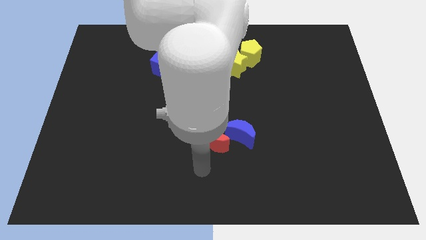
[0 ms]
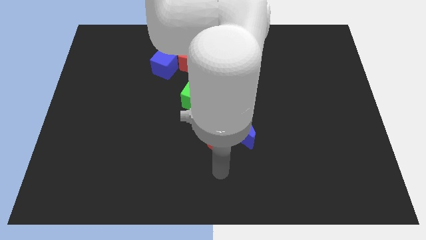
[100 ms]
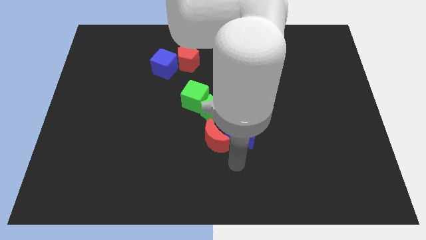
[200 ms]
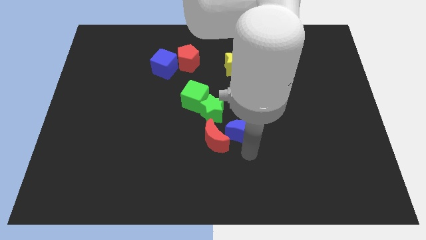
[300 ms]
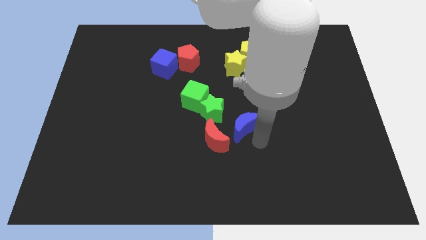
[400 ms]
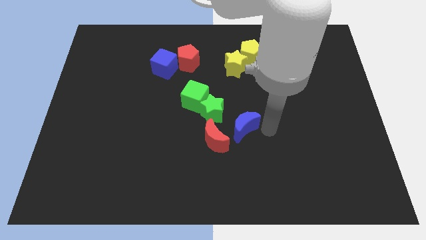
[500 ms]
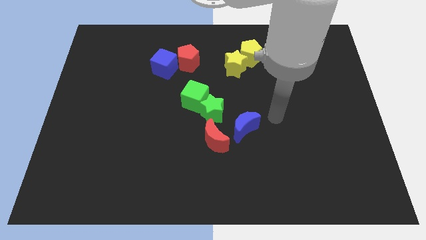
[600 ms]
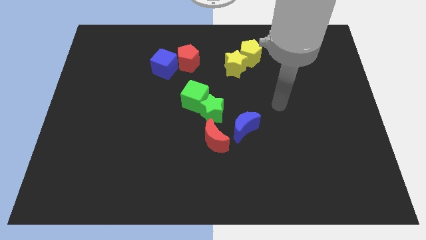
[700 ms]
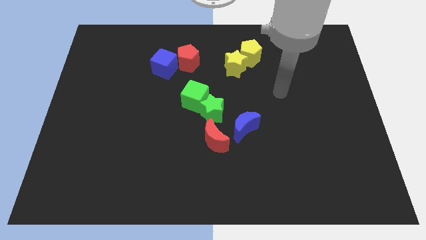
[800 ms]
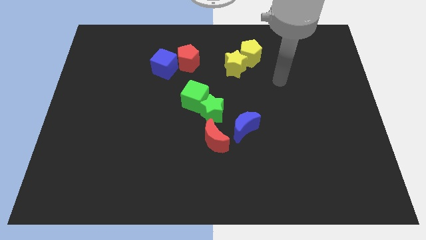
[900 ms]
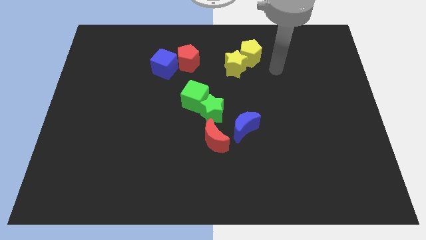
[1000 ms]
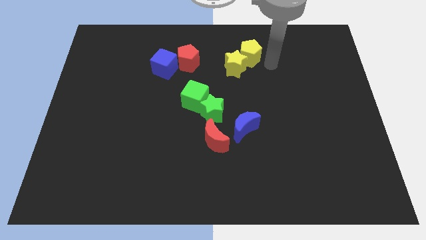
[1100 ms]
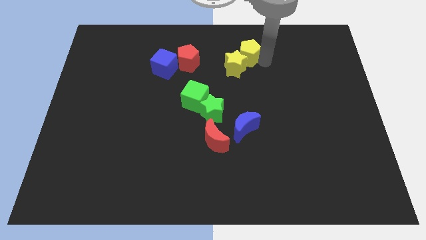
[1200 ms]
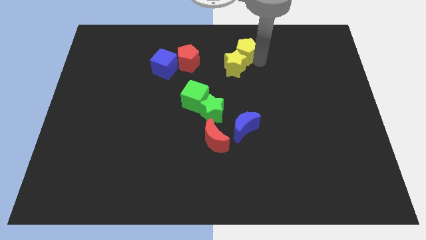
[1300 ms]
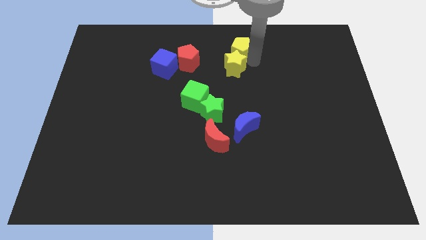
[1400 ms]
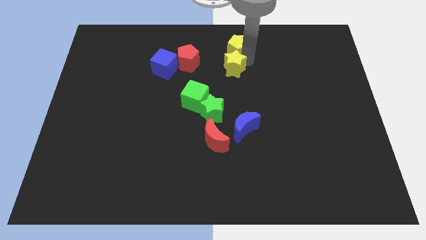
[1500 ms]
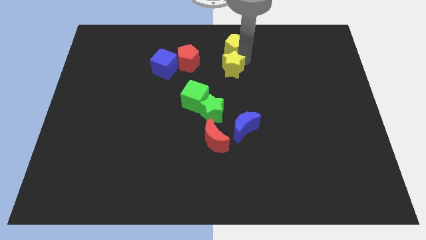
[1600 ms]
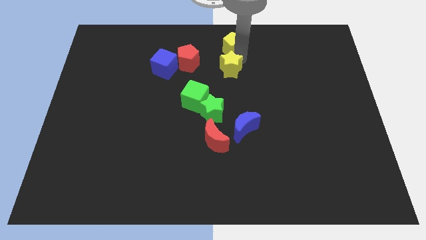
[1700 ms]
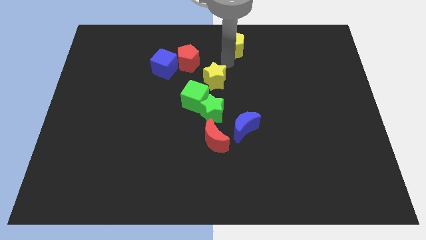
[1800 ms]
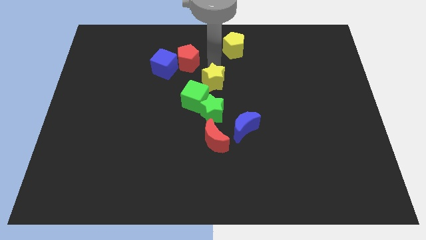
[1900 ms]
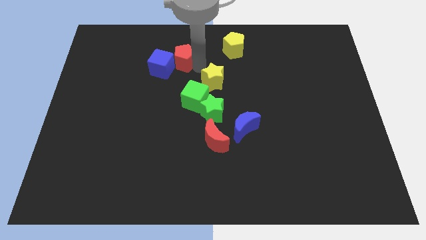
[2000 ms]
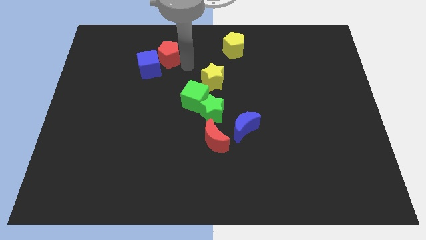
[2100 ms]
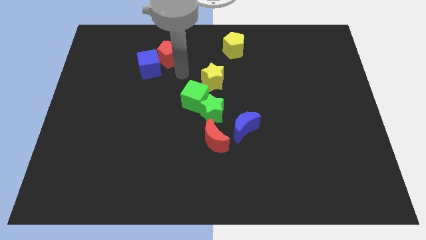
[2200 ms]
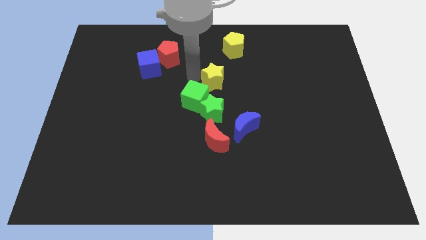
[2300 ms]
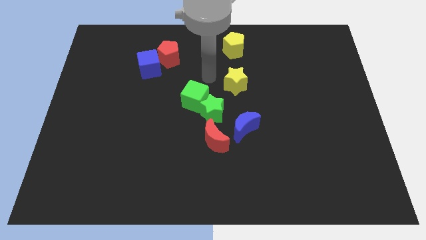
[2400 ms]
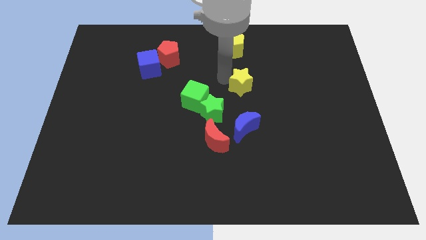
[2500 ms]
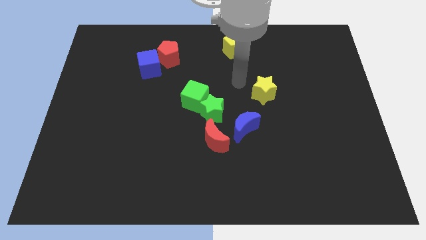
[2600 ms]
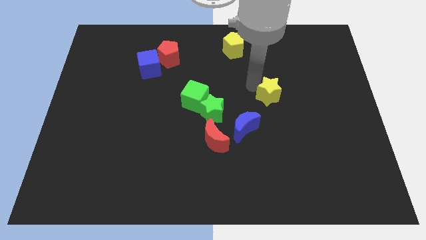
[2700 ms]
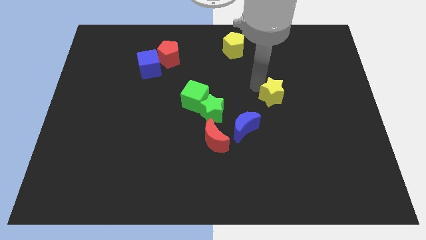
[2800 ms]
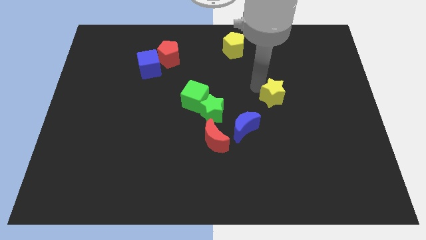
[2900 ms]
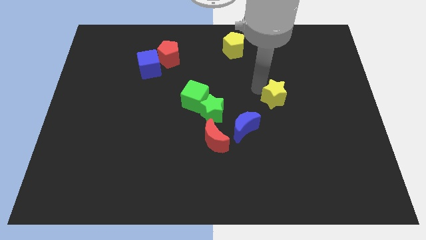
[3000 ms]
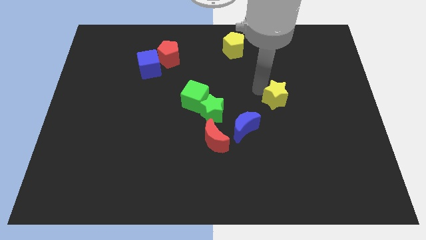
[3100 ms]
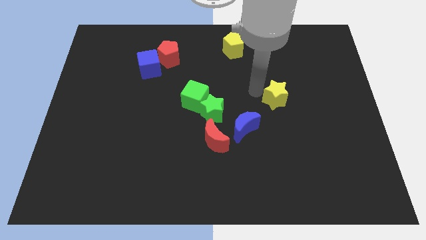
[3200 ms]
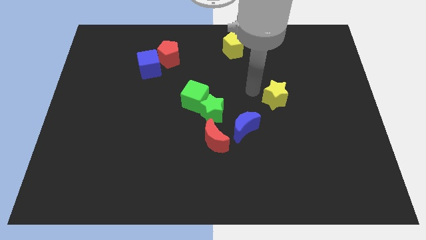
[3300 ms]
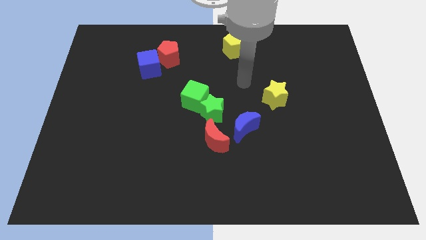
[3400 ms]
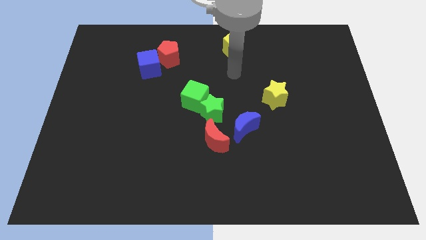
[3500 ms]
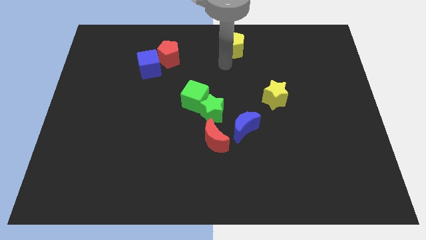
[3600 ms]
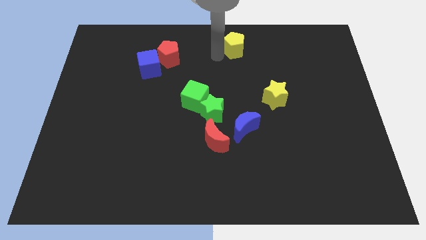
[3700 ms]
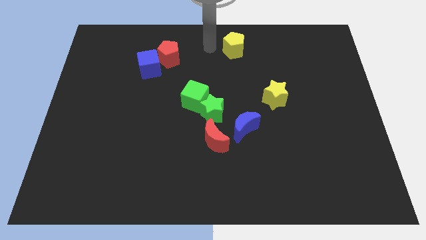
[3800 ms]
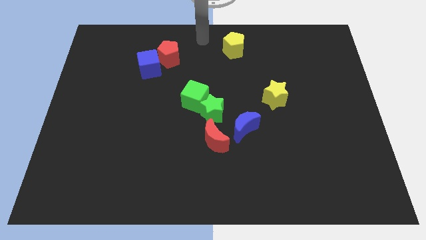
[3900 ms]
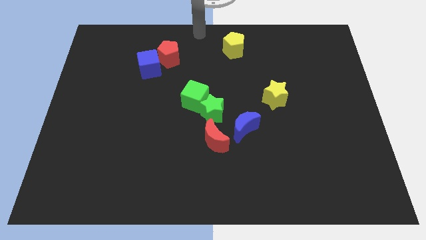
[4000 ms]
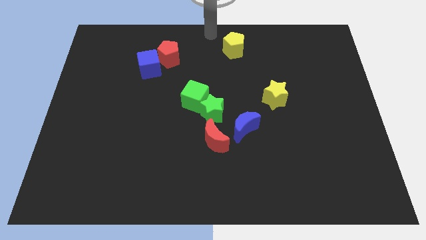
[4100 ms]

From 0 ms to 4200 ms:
push the yellow star towards the right center

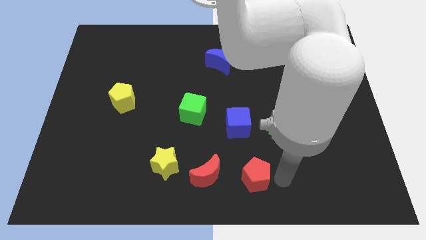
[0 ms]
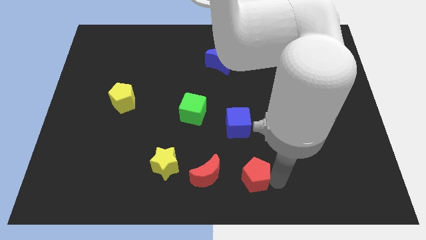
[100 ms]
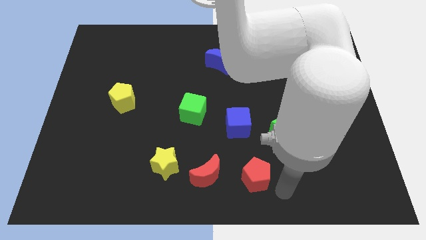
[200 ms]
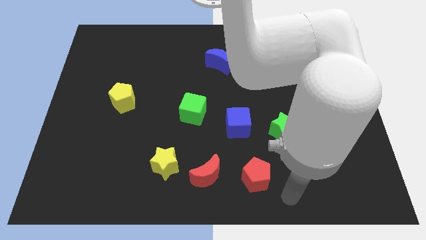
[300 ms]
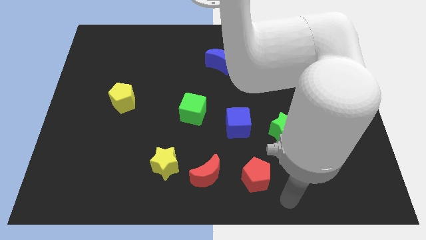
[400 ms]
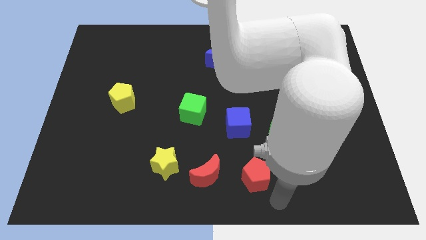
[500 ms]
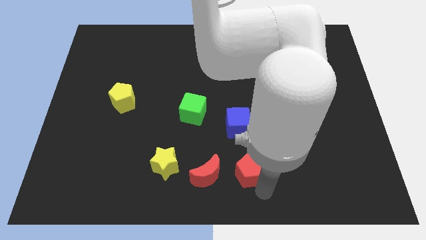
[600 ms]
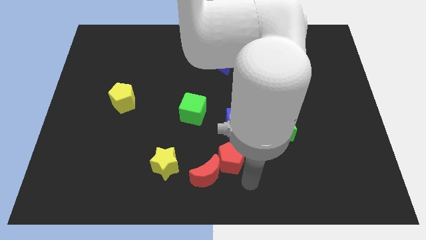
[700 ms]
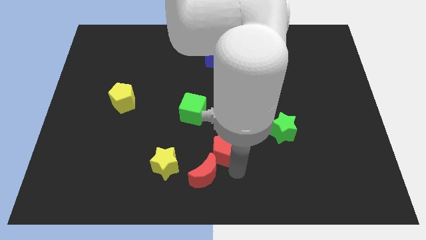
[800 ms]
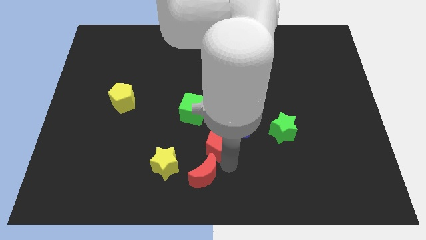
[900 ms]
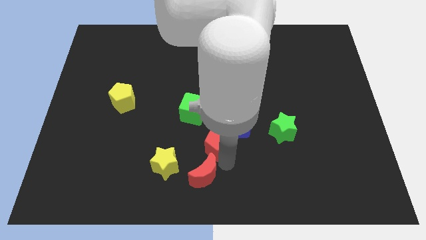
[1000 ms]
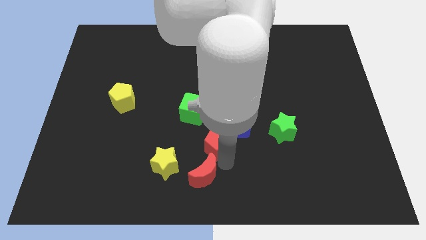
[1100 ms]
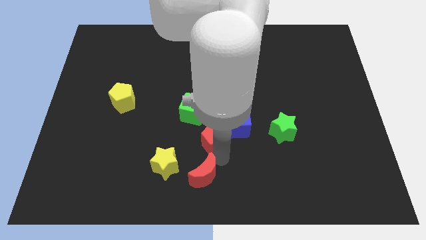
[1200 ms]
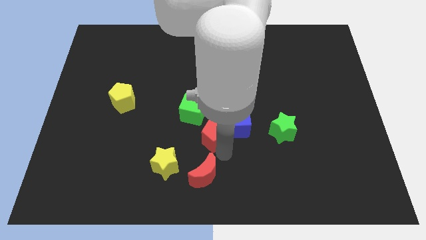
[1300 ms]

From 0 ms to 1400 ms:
put the red pentagon above the red moon

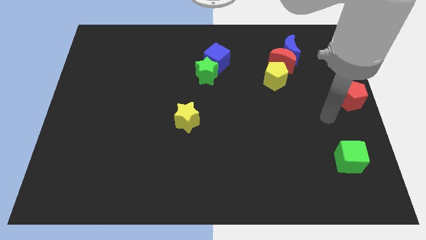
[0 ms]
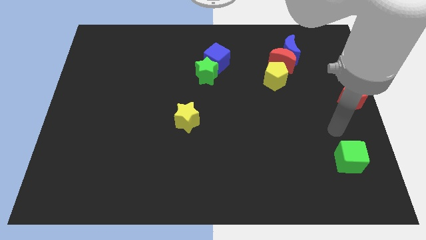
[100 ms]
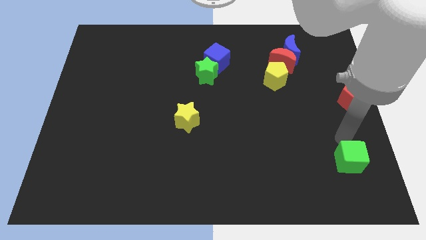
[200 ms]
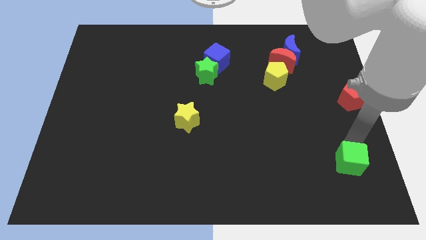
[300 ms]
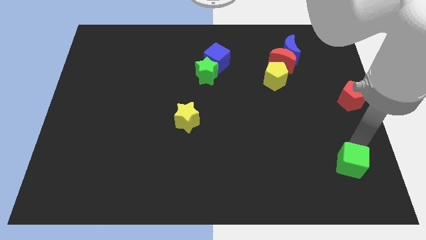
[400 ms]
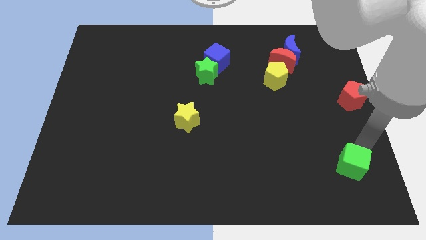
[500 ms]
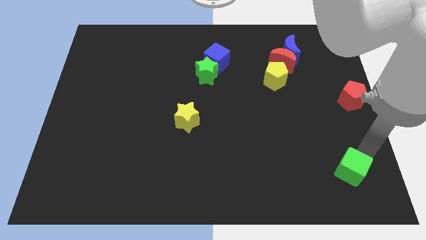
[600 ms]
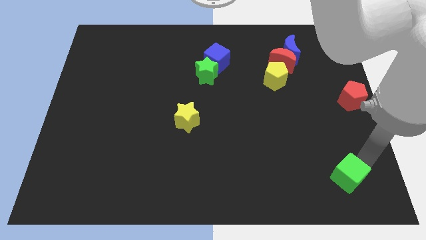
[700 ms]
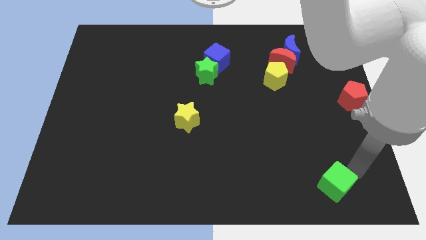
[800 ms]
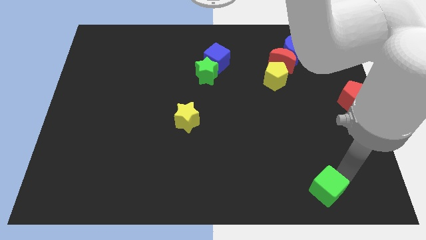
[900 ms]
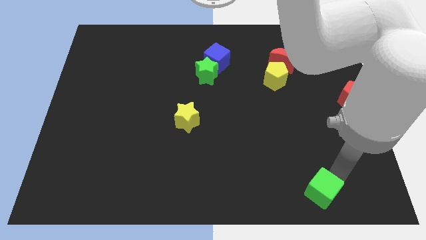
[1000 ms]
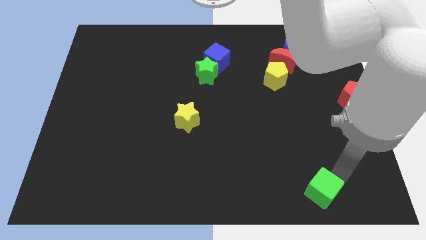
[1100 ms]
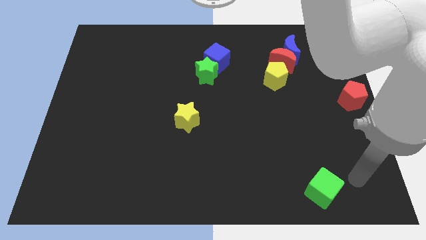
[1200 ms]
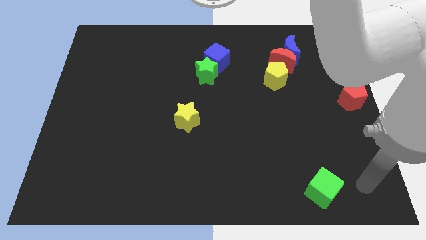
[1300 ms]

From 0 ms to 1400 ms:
push green cube to bottom side of the board

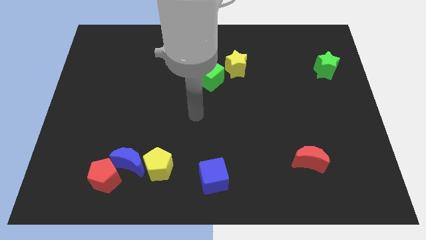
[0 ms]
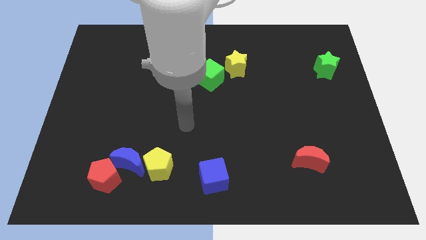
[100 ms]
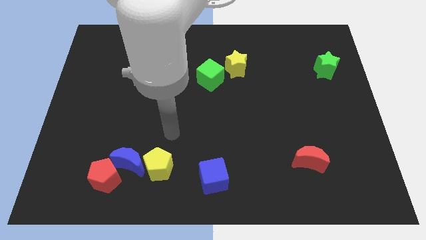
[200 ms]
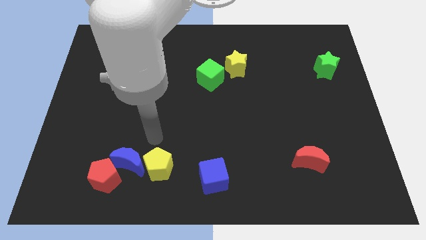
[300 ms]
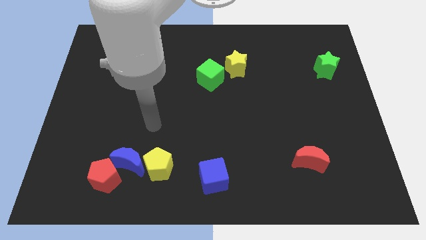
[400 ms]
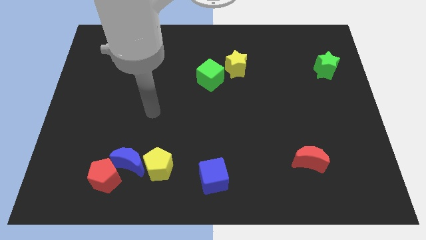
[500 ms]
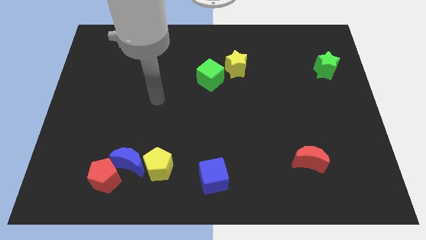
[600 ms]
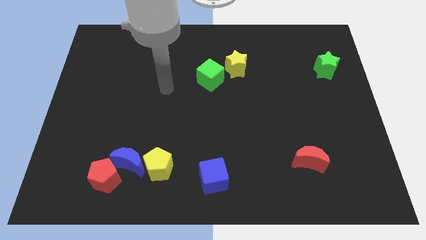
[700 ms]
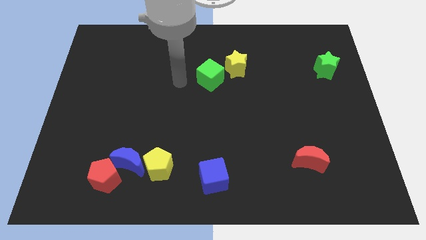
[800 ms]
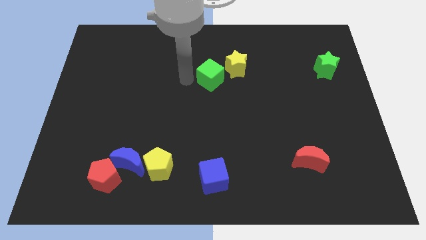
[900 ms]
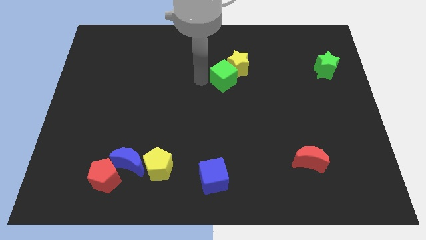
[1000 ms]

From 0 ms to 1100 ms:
move the green cube into the yellow star

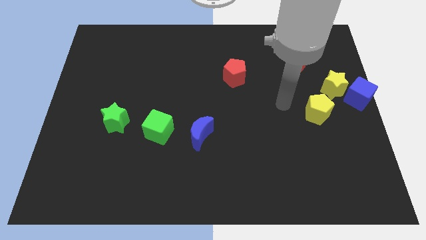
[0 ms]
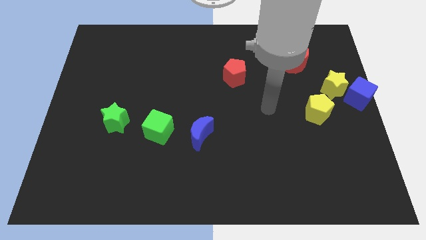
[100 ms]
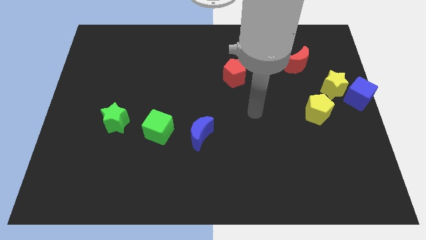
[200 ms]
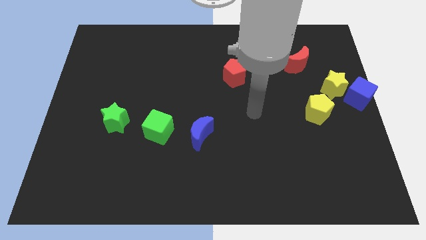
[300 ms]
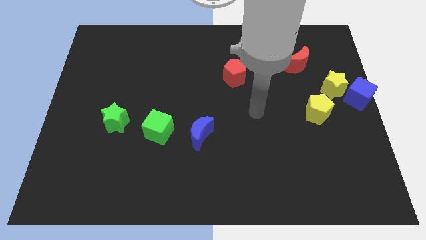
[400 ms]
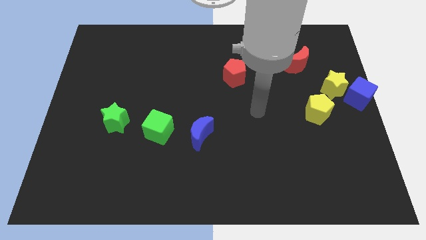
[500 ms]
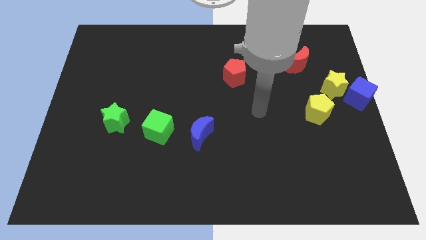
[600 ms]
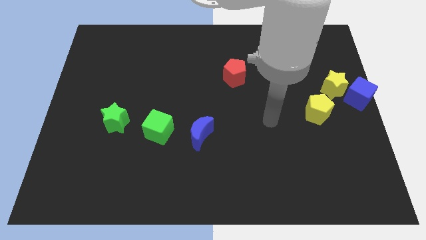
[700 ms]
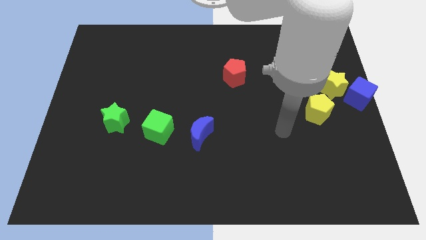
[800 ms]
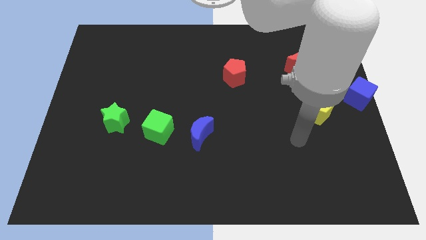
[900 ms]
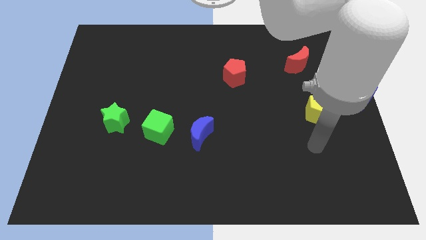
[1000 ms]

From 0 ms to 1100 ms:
move your arm to the bottom of the yellow pentagon
